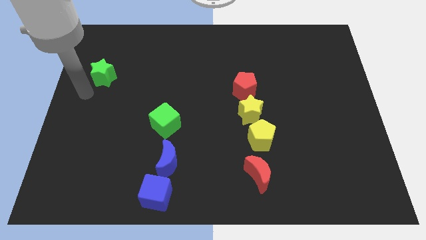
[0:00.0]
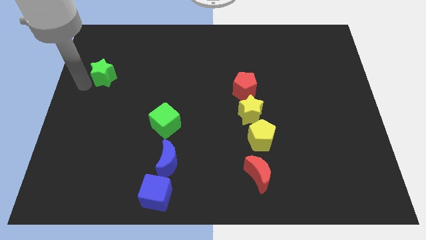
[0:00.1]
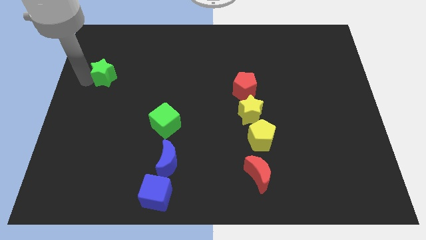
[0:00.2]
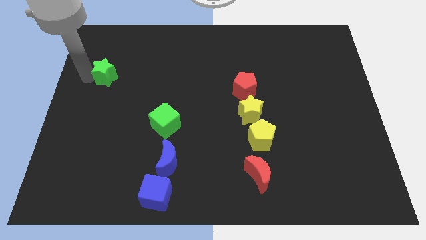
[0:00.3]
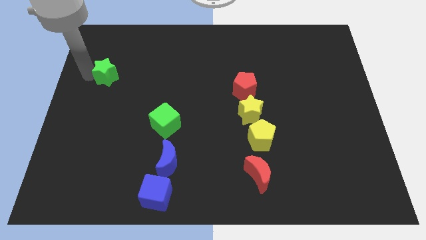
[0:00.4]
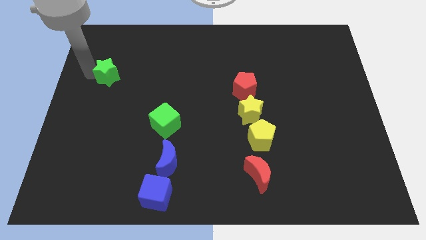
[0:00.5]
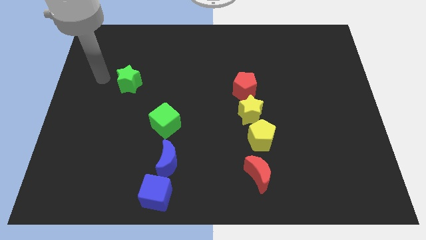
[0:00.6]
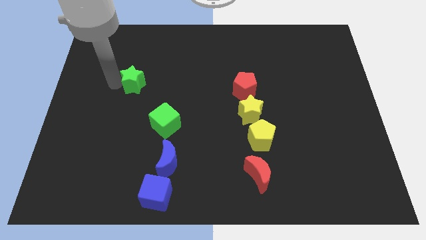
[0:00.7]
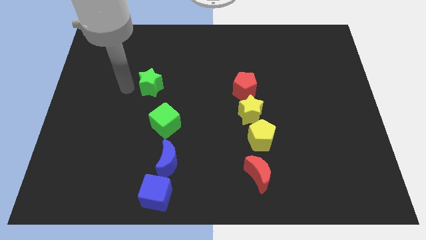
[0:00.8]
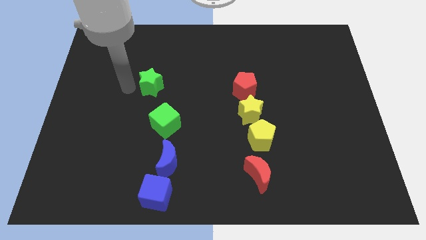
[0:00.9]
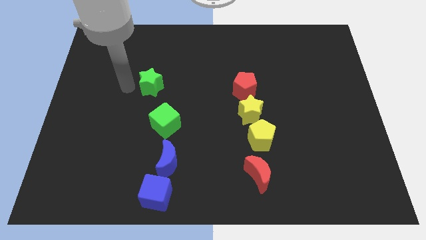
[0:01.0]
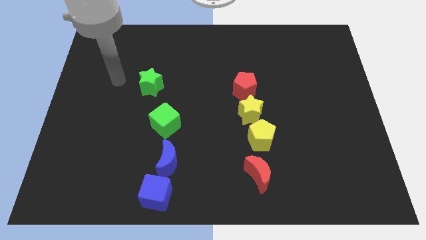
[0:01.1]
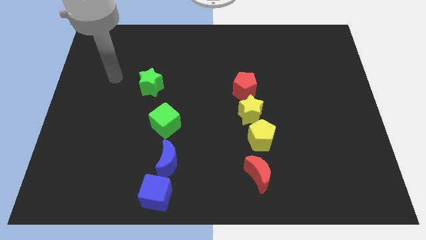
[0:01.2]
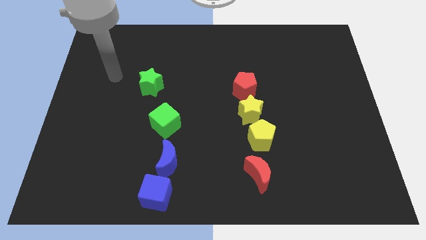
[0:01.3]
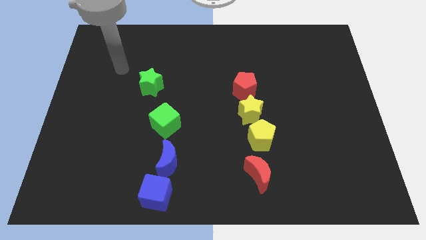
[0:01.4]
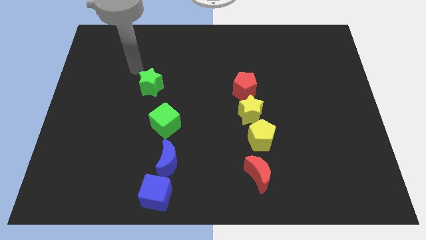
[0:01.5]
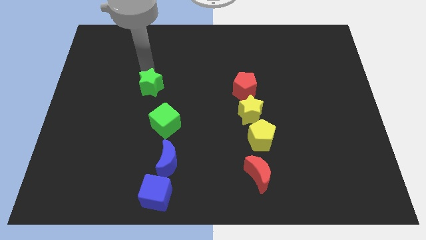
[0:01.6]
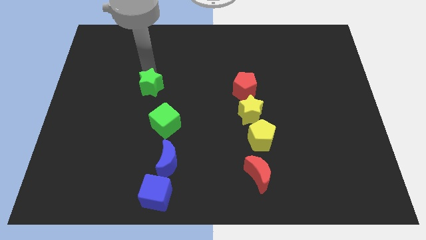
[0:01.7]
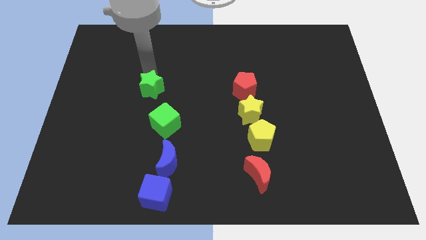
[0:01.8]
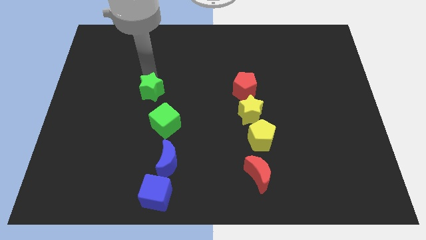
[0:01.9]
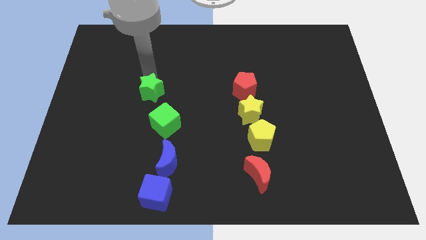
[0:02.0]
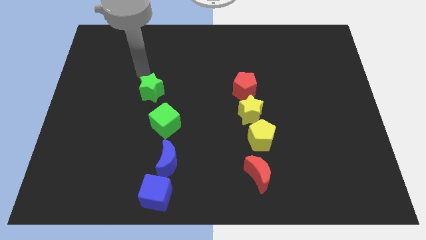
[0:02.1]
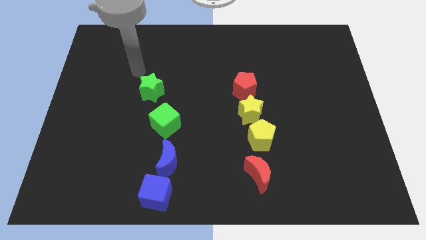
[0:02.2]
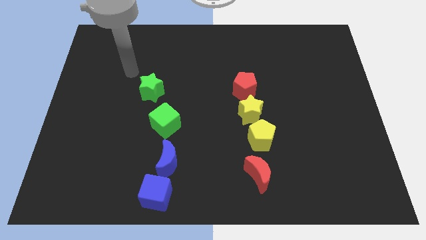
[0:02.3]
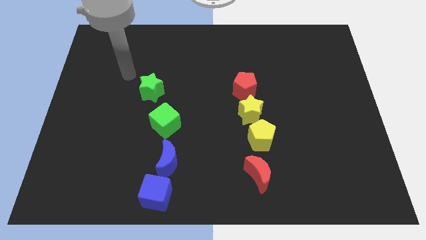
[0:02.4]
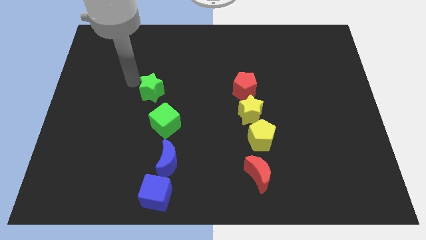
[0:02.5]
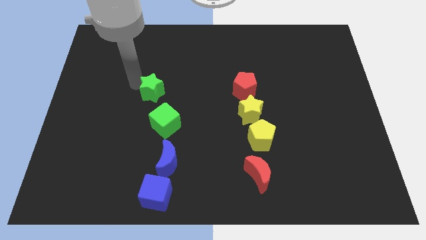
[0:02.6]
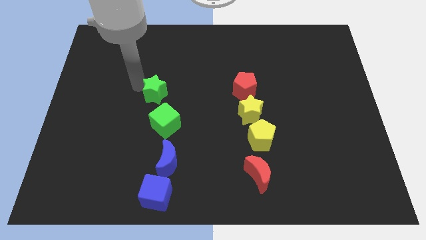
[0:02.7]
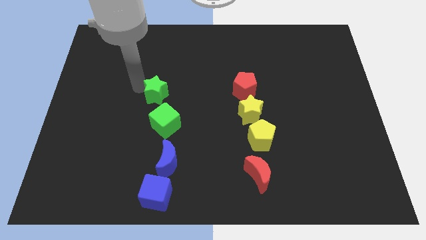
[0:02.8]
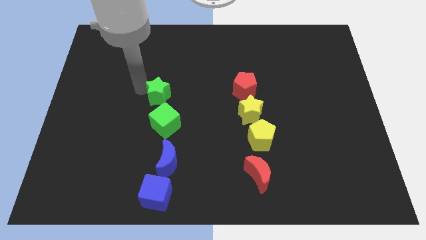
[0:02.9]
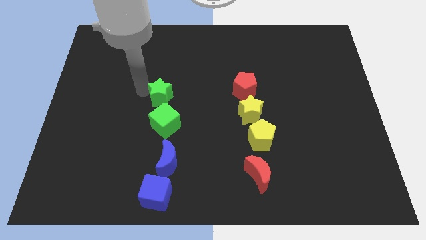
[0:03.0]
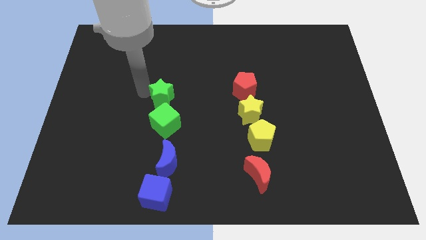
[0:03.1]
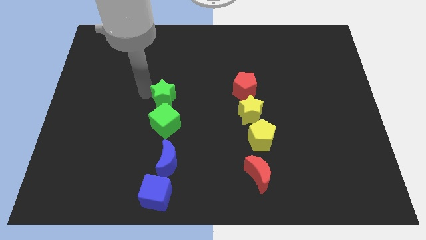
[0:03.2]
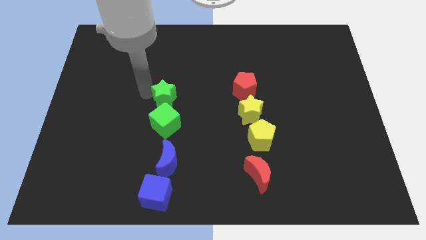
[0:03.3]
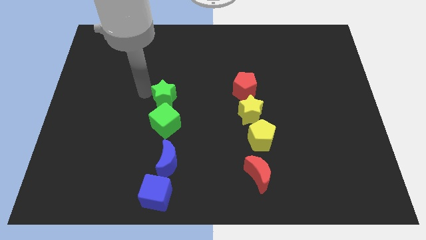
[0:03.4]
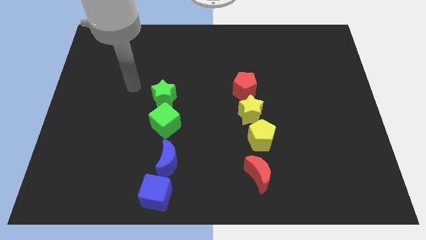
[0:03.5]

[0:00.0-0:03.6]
place the green star to the top of green cube

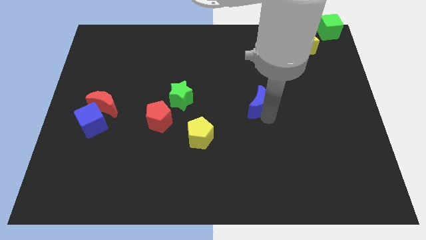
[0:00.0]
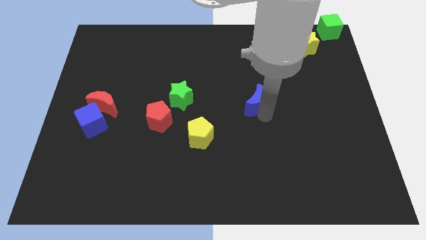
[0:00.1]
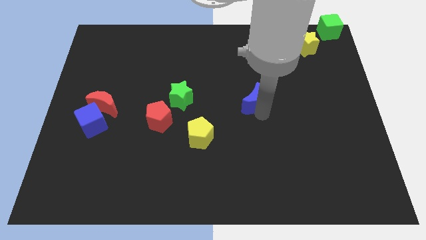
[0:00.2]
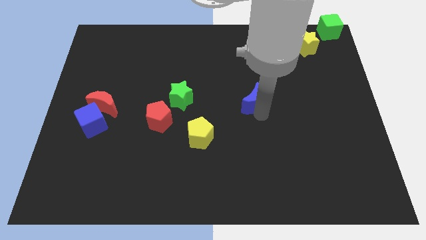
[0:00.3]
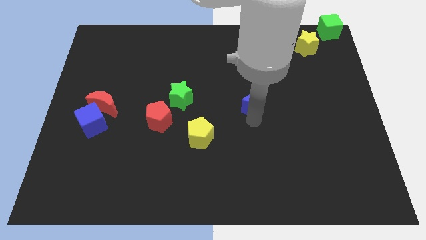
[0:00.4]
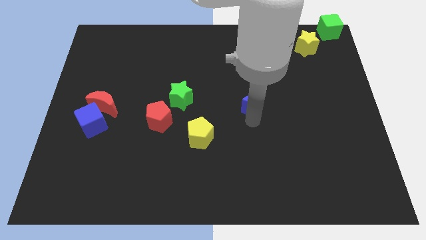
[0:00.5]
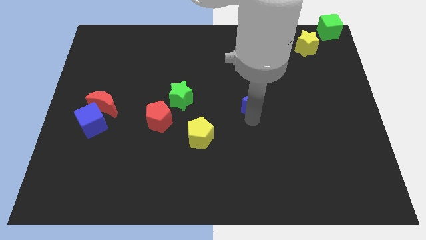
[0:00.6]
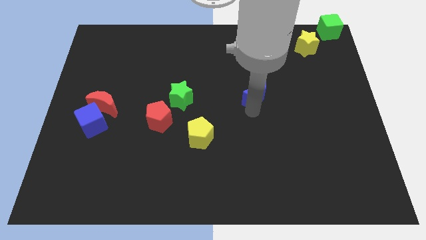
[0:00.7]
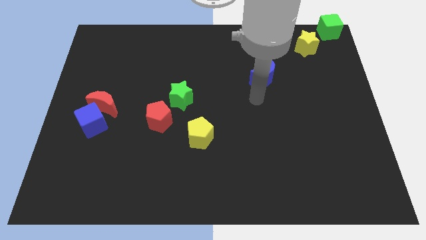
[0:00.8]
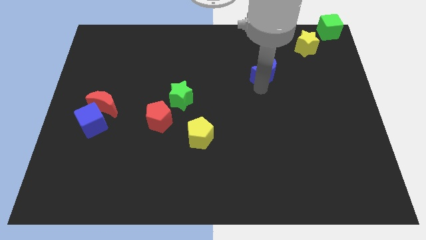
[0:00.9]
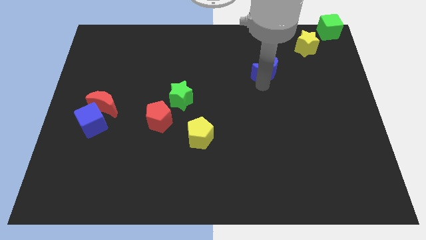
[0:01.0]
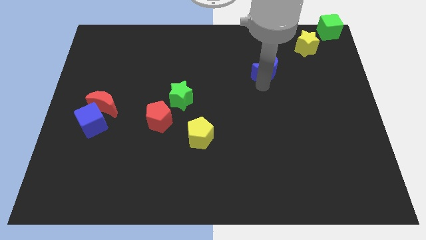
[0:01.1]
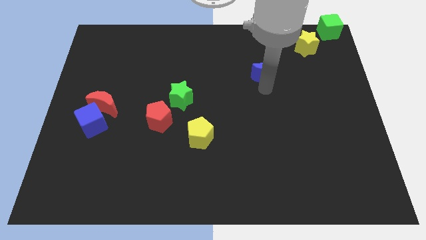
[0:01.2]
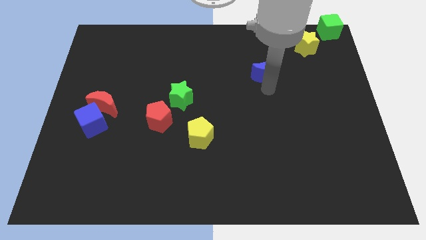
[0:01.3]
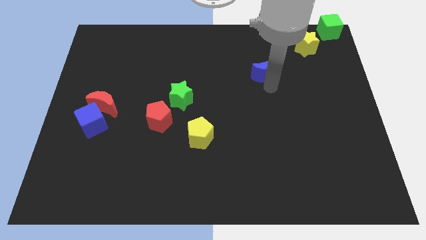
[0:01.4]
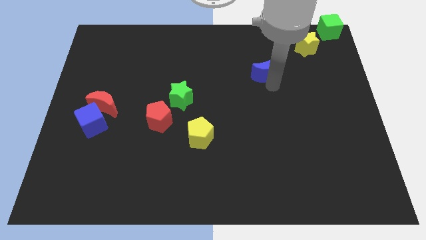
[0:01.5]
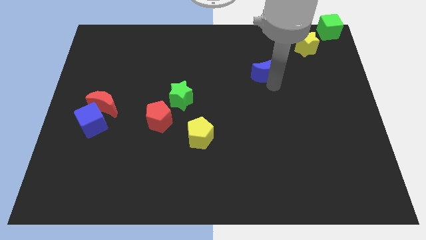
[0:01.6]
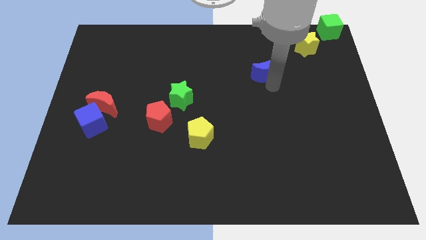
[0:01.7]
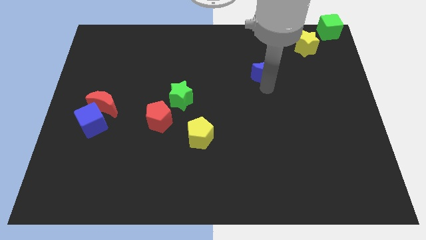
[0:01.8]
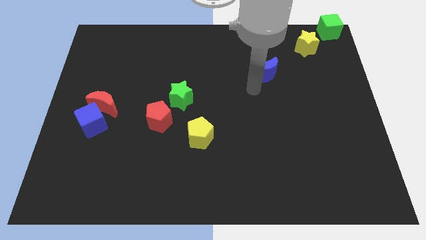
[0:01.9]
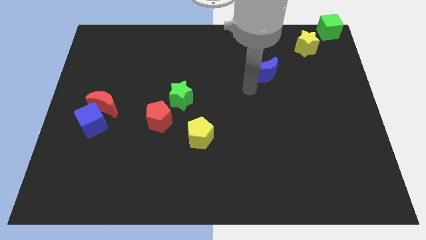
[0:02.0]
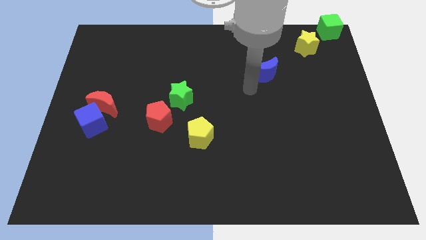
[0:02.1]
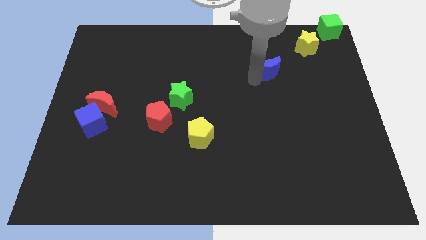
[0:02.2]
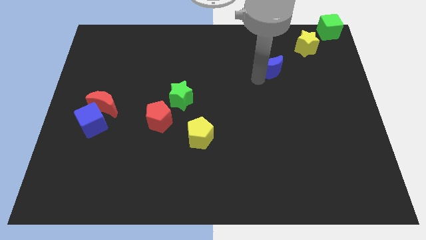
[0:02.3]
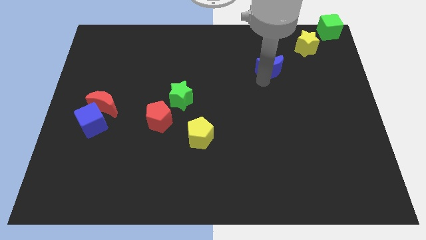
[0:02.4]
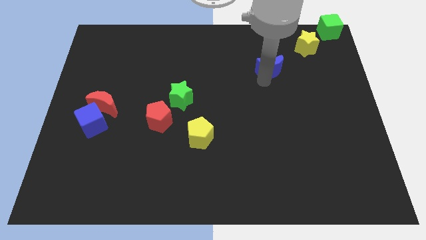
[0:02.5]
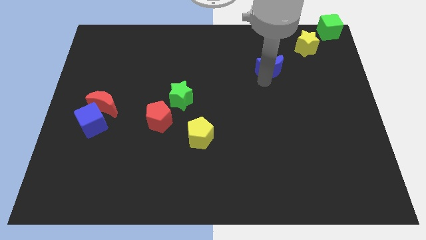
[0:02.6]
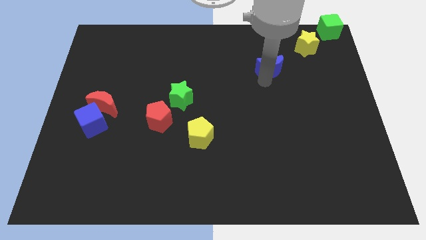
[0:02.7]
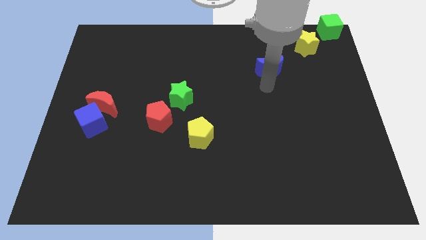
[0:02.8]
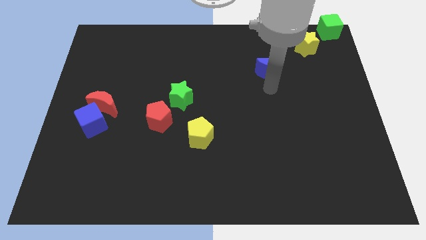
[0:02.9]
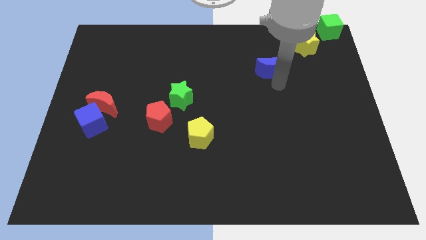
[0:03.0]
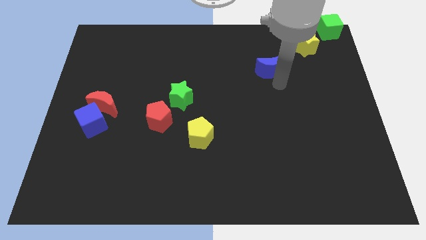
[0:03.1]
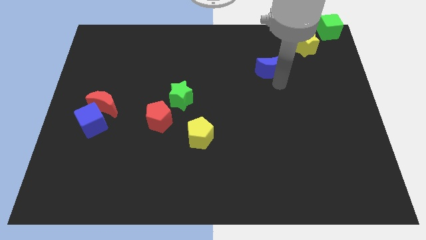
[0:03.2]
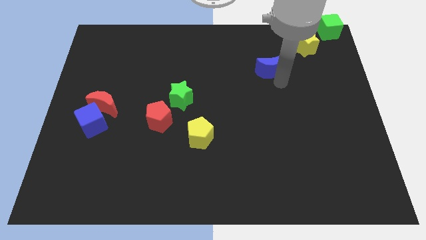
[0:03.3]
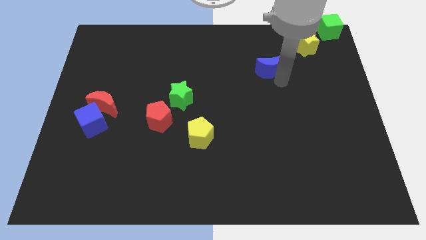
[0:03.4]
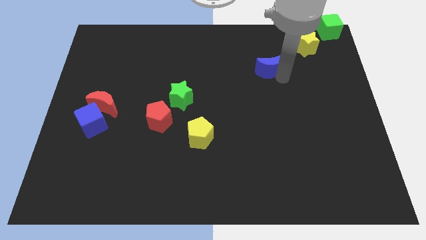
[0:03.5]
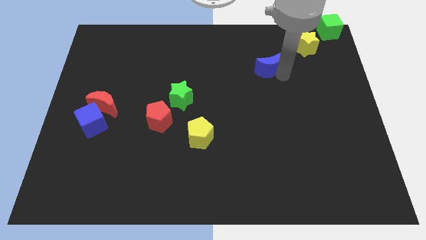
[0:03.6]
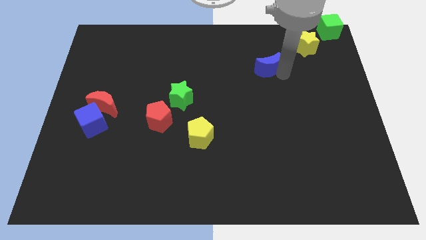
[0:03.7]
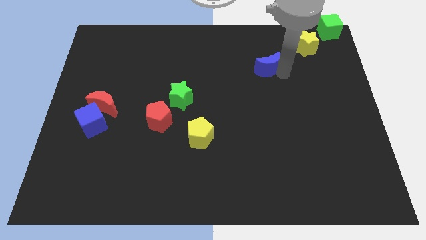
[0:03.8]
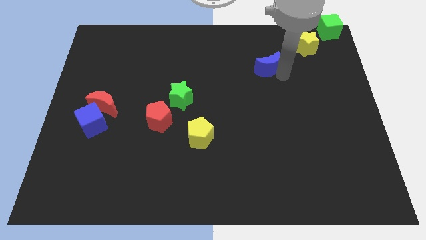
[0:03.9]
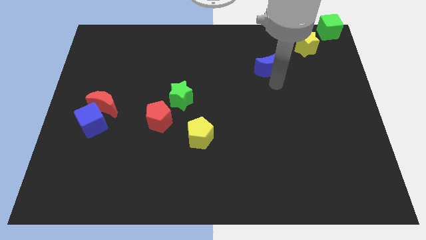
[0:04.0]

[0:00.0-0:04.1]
move the blue crescent parallel to the left of yellow star

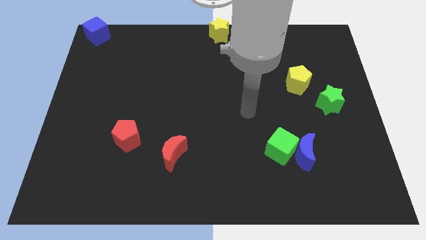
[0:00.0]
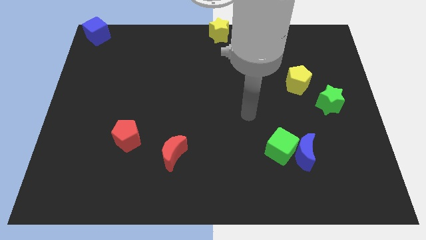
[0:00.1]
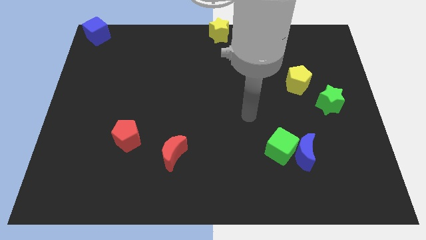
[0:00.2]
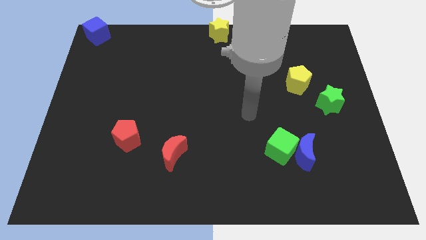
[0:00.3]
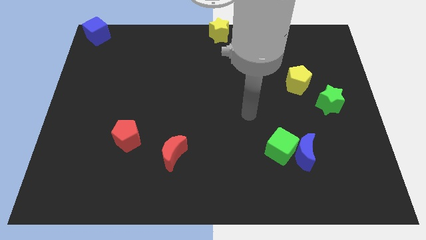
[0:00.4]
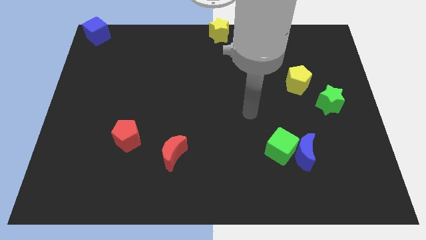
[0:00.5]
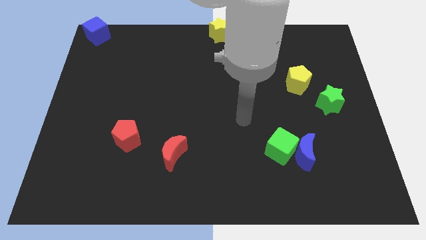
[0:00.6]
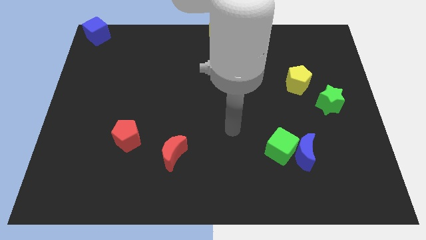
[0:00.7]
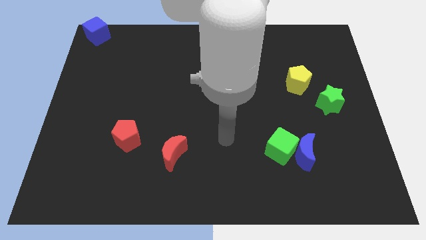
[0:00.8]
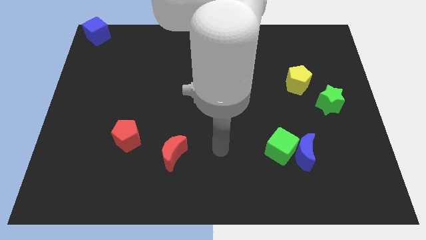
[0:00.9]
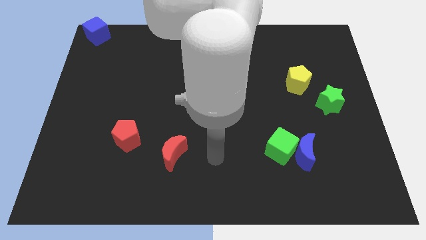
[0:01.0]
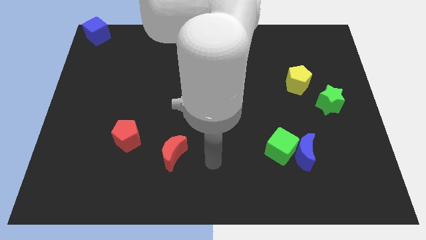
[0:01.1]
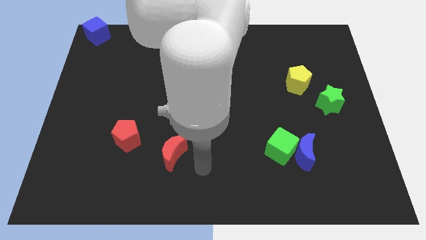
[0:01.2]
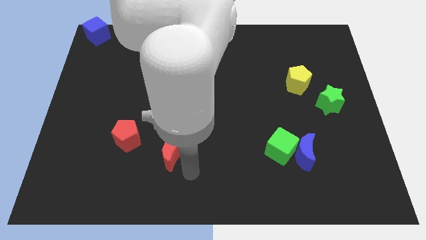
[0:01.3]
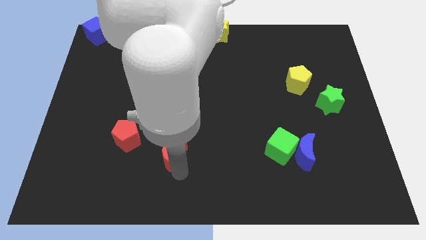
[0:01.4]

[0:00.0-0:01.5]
place your arm to the bottom of the red moon
